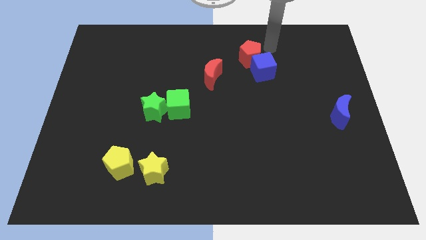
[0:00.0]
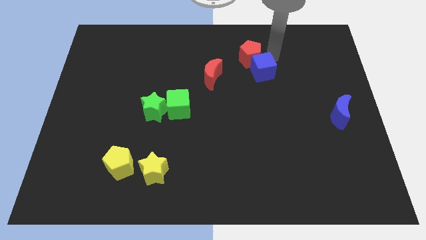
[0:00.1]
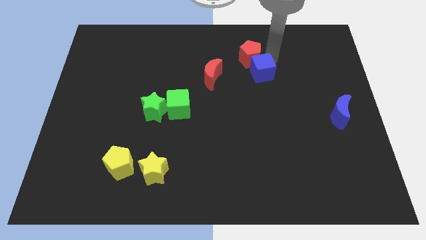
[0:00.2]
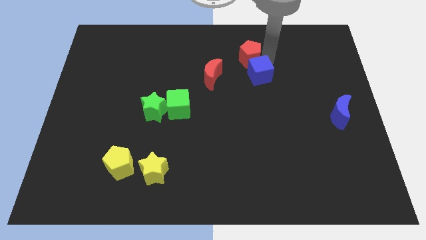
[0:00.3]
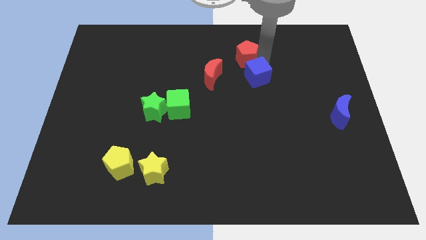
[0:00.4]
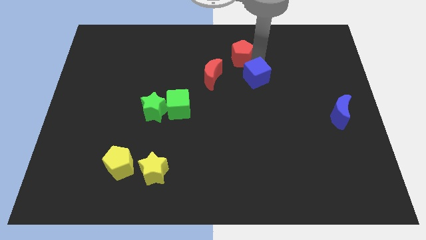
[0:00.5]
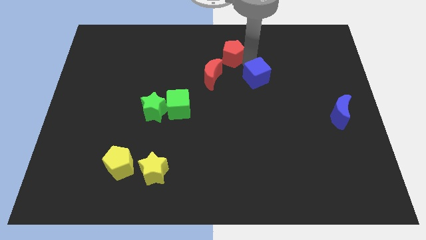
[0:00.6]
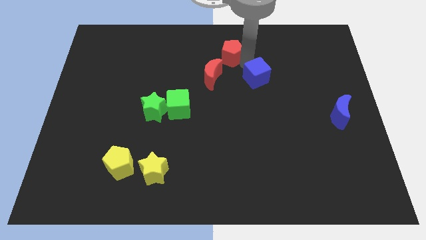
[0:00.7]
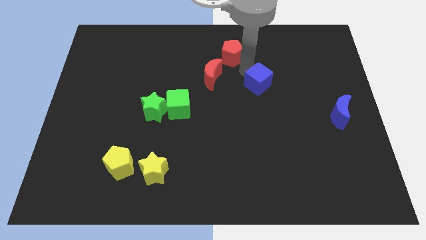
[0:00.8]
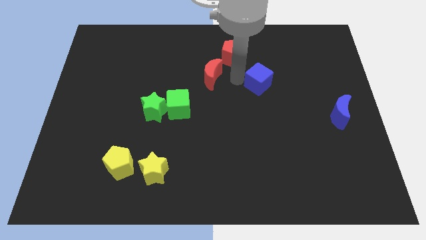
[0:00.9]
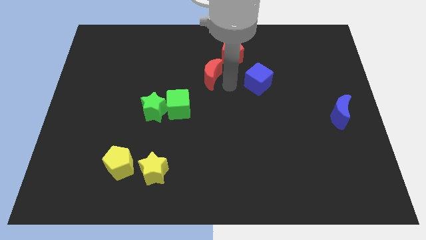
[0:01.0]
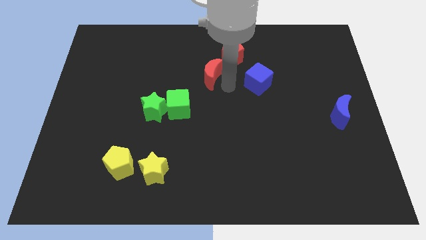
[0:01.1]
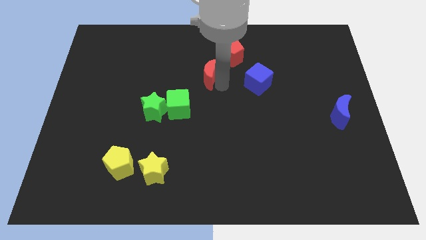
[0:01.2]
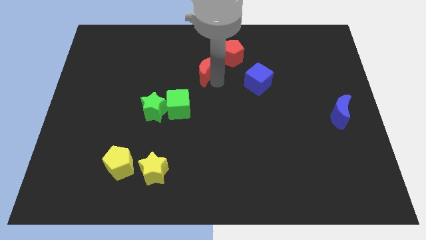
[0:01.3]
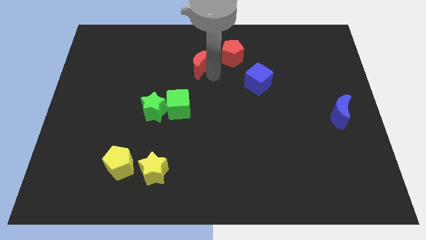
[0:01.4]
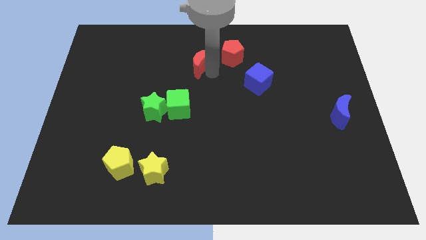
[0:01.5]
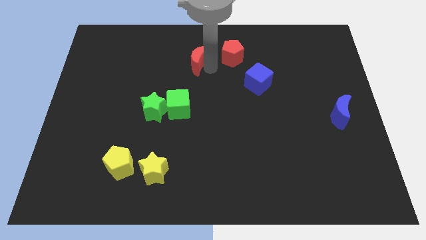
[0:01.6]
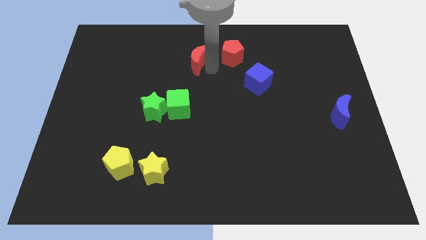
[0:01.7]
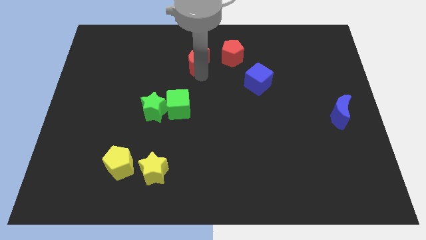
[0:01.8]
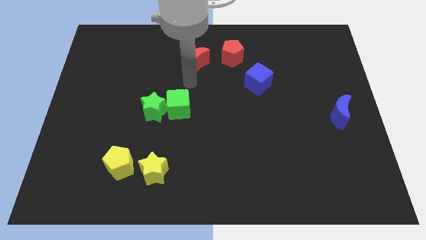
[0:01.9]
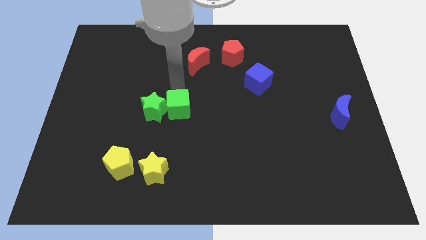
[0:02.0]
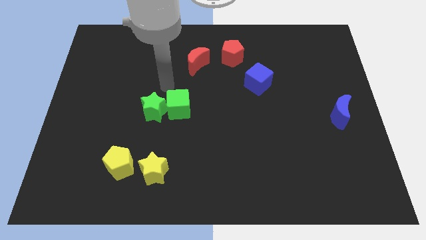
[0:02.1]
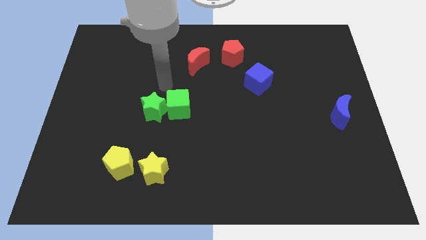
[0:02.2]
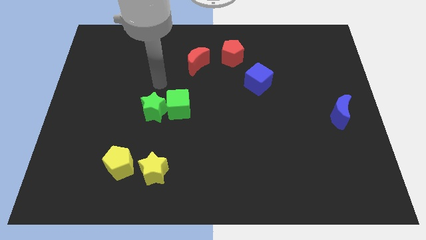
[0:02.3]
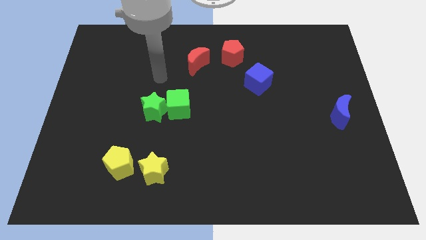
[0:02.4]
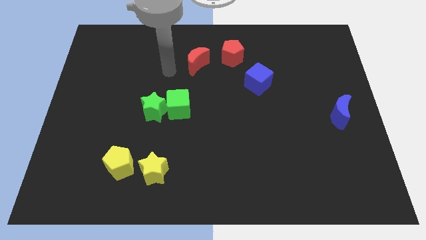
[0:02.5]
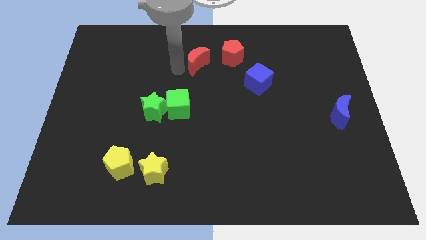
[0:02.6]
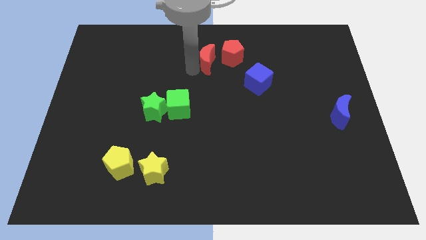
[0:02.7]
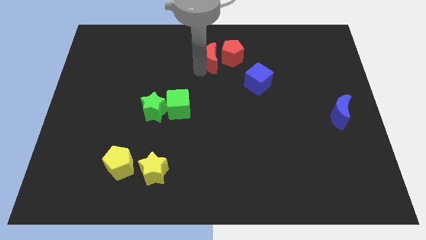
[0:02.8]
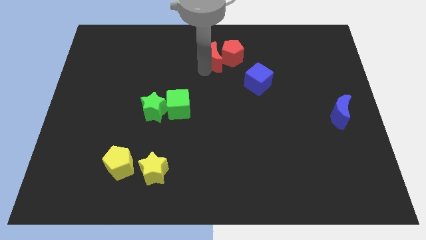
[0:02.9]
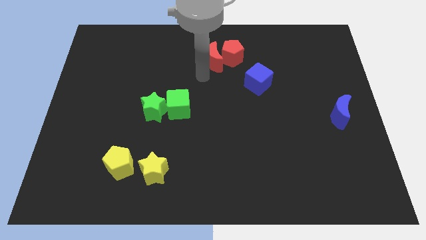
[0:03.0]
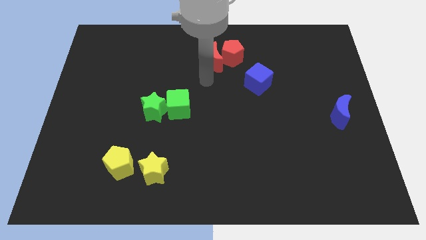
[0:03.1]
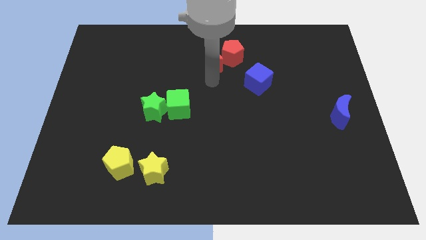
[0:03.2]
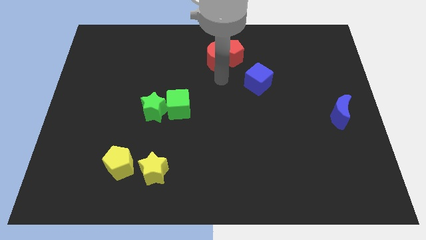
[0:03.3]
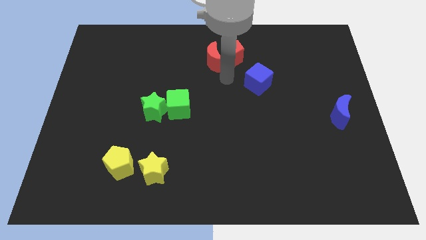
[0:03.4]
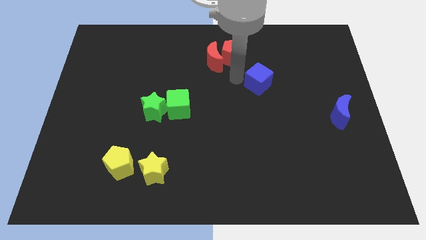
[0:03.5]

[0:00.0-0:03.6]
move red moon close to red pentagon

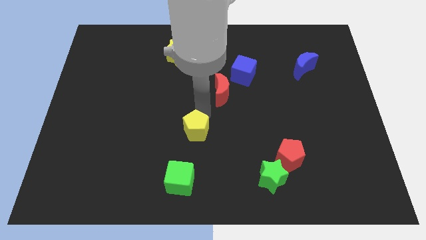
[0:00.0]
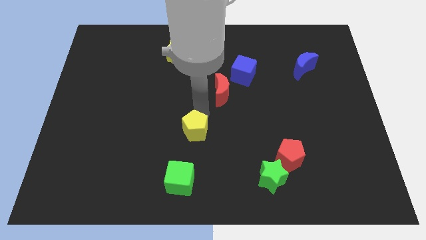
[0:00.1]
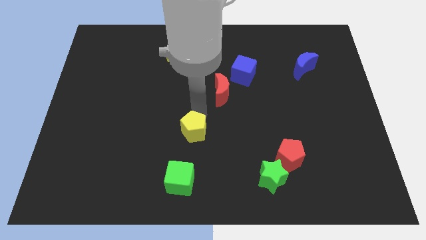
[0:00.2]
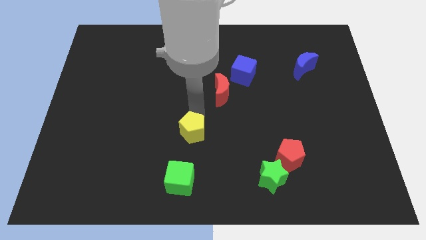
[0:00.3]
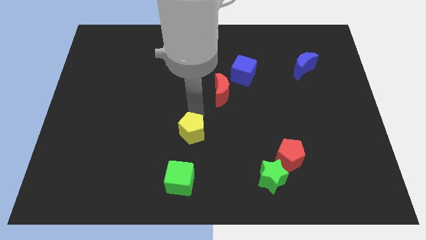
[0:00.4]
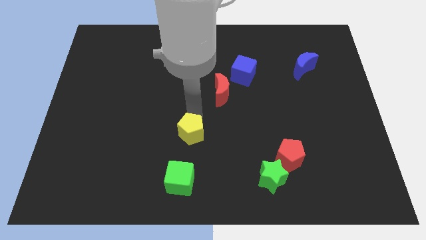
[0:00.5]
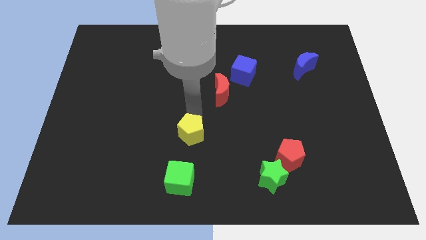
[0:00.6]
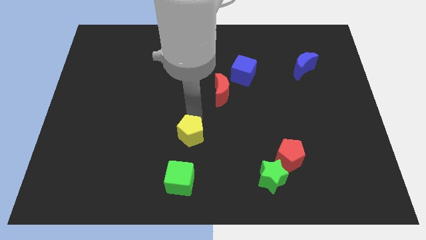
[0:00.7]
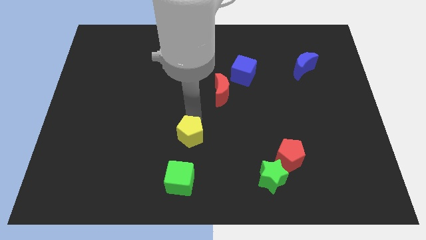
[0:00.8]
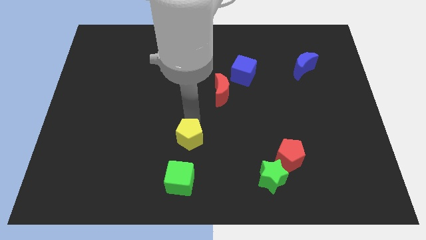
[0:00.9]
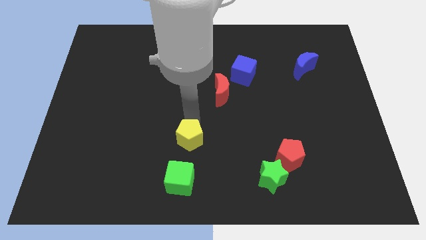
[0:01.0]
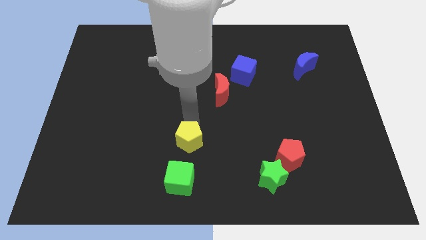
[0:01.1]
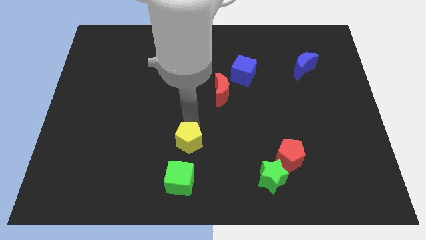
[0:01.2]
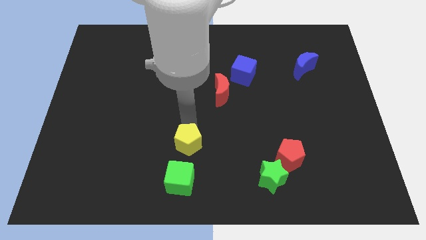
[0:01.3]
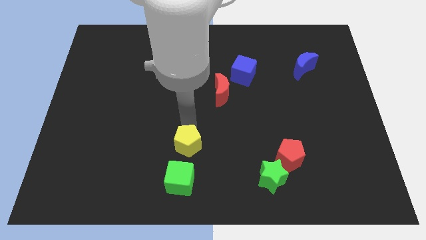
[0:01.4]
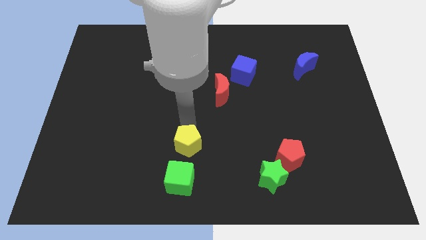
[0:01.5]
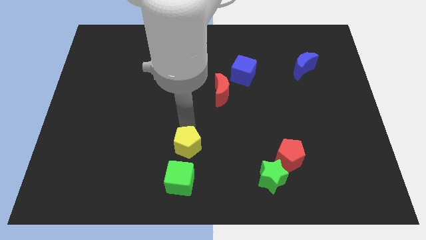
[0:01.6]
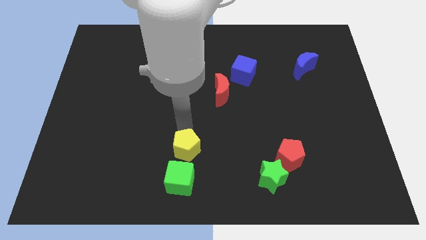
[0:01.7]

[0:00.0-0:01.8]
put the yellow pentagon at the top of green cube

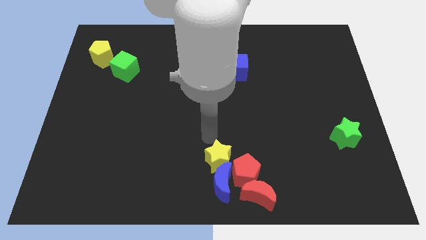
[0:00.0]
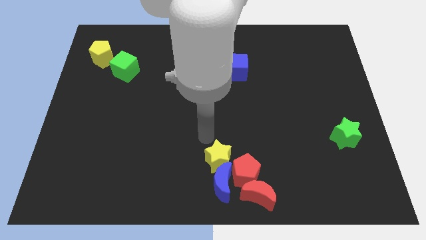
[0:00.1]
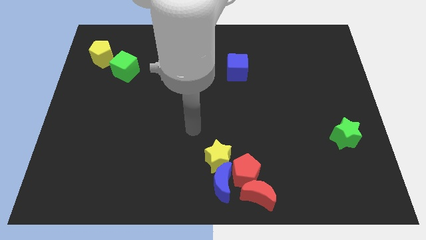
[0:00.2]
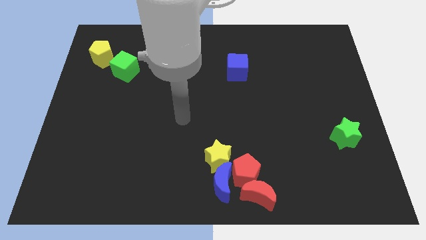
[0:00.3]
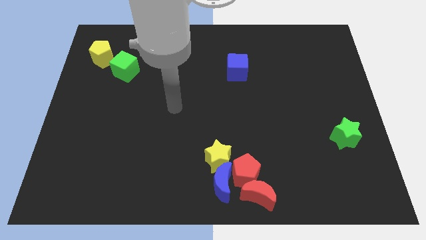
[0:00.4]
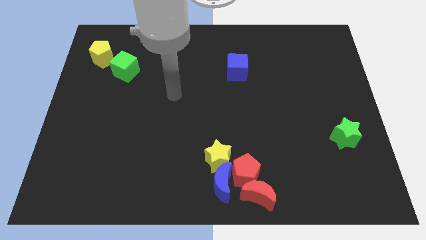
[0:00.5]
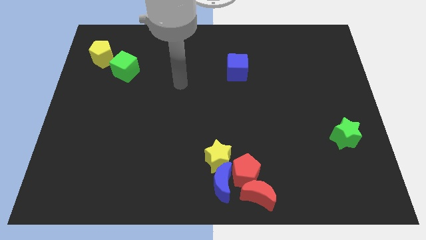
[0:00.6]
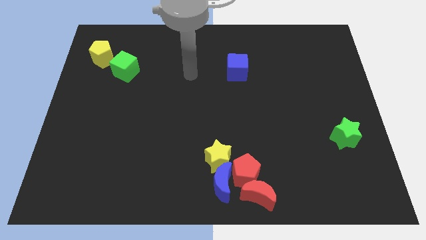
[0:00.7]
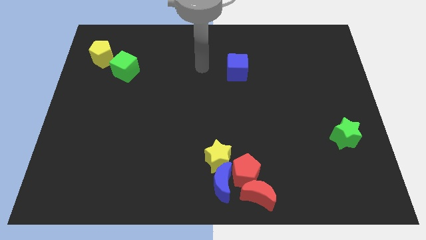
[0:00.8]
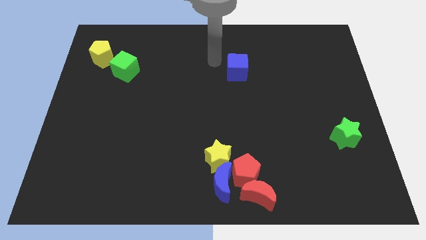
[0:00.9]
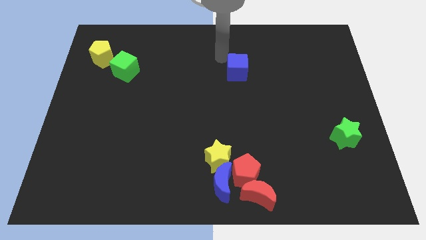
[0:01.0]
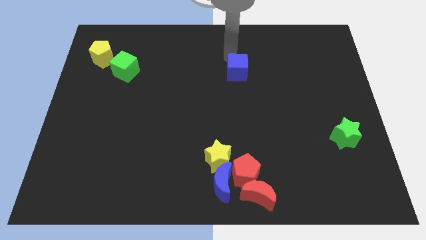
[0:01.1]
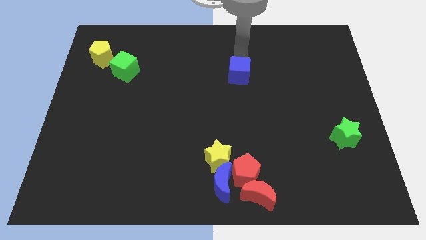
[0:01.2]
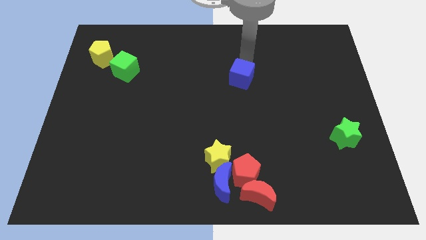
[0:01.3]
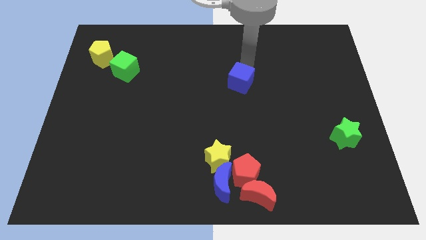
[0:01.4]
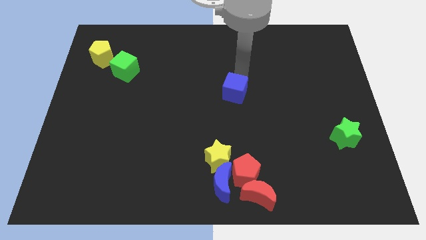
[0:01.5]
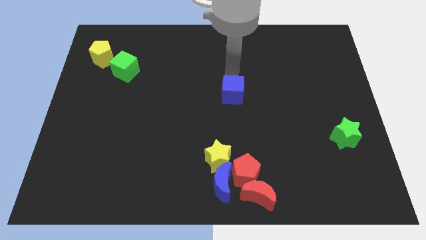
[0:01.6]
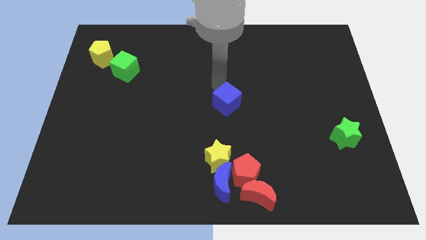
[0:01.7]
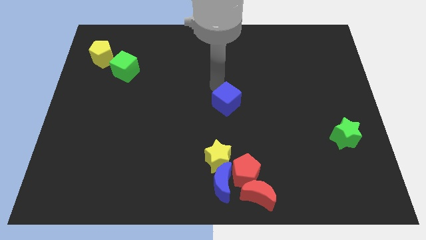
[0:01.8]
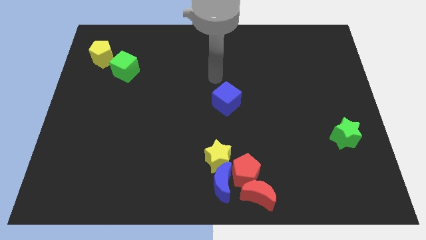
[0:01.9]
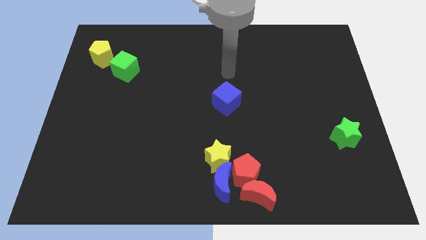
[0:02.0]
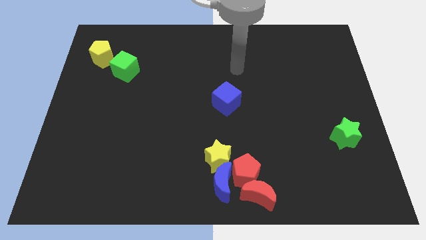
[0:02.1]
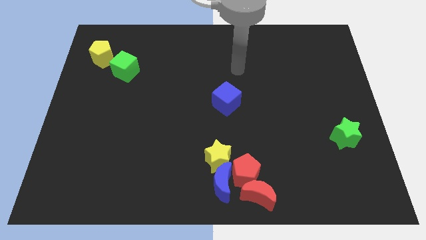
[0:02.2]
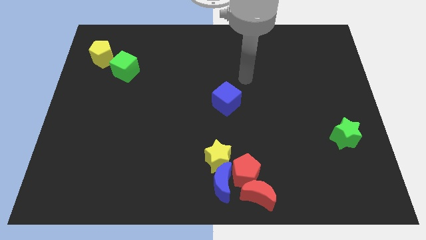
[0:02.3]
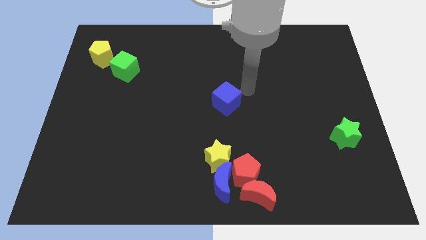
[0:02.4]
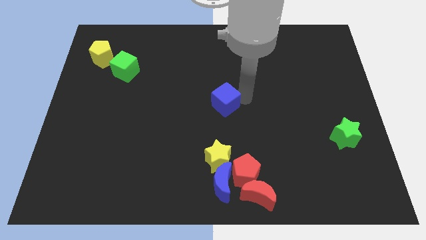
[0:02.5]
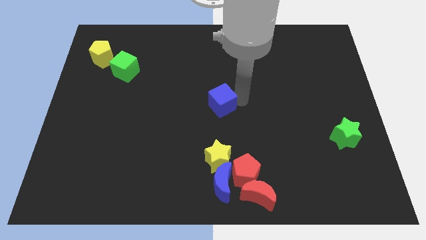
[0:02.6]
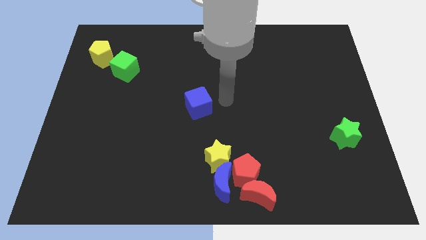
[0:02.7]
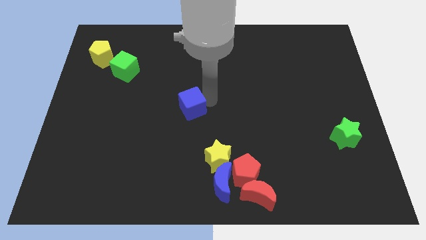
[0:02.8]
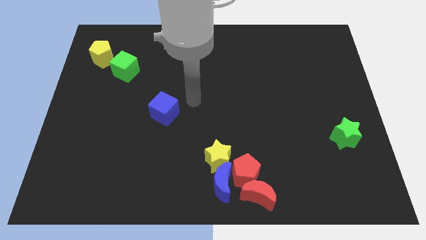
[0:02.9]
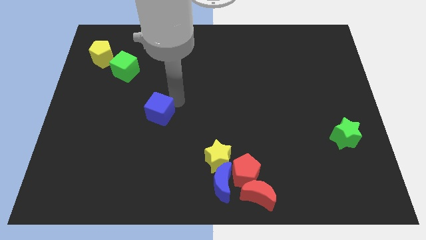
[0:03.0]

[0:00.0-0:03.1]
place the blue cube diagonally in between green cube and yellow star

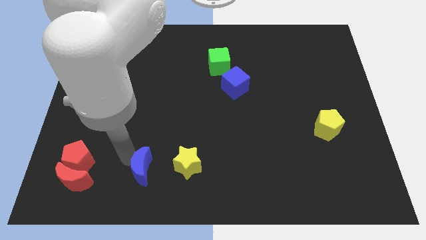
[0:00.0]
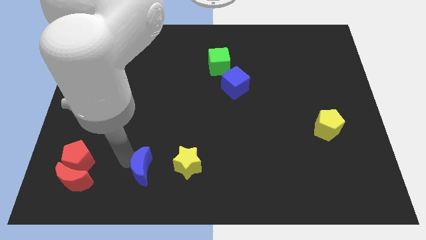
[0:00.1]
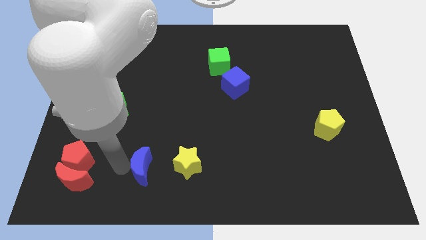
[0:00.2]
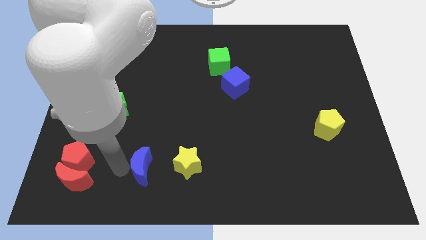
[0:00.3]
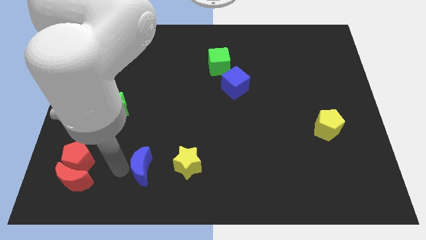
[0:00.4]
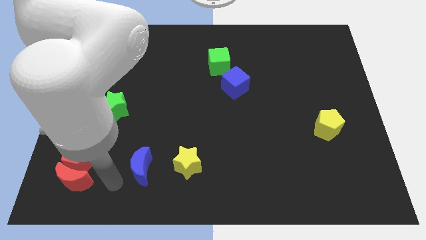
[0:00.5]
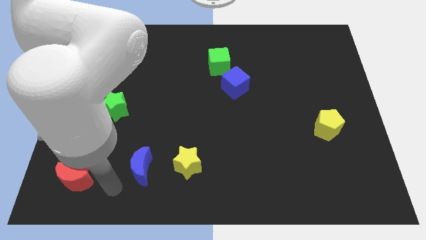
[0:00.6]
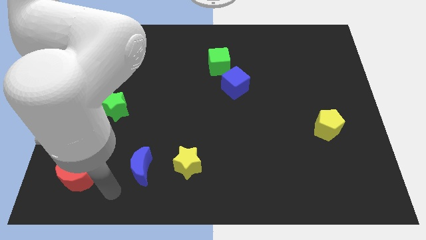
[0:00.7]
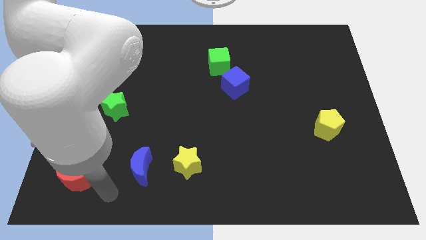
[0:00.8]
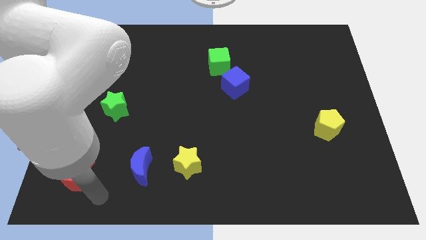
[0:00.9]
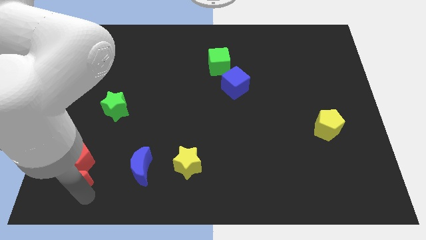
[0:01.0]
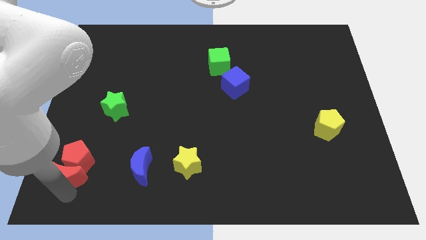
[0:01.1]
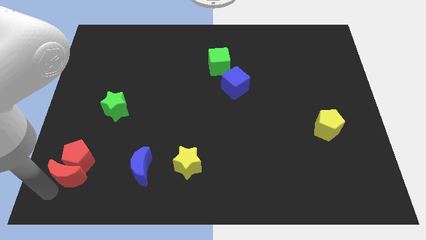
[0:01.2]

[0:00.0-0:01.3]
move your arm to the bottom of the red moon
